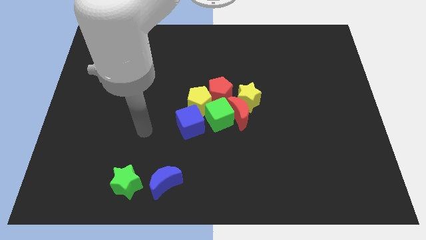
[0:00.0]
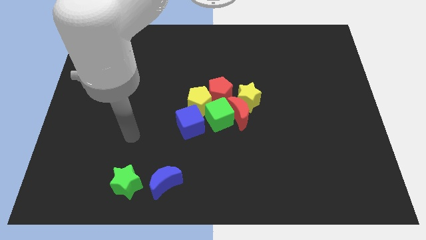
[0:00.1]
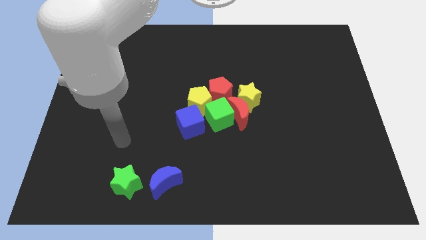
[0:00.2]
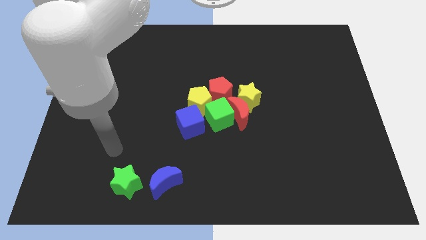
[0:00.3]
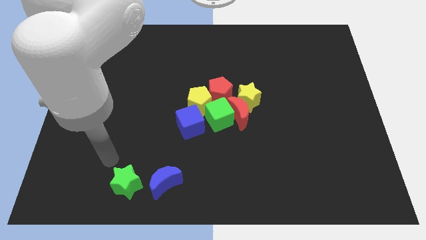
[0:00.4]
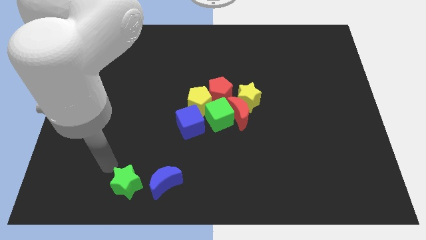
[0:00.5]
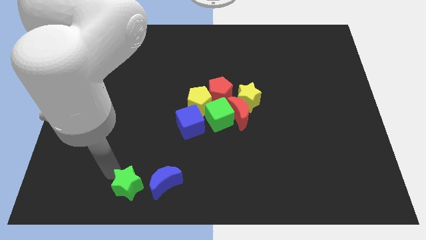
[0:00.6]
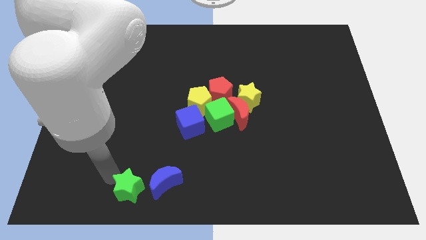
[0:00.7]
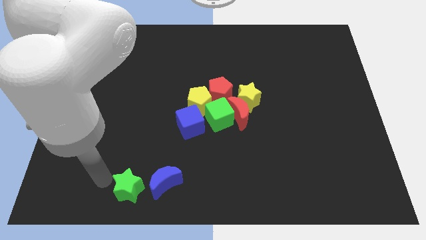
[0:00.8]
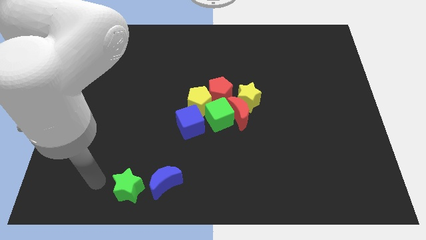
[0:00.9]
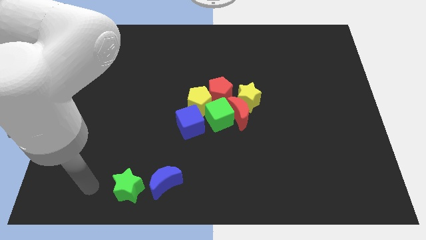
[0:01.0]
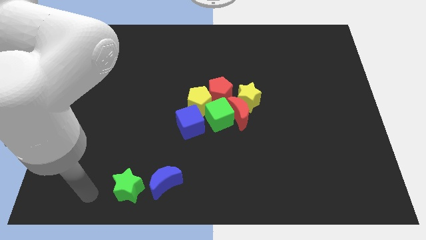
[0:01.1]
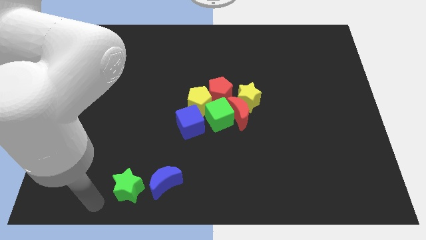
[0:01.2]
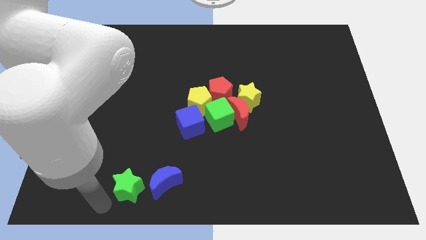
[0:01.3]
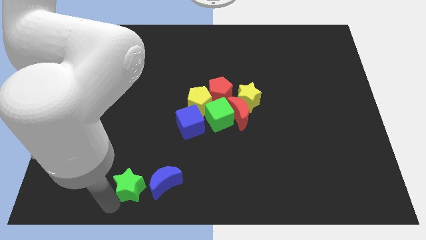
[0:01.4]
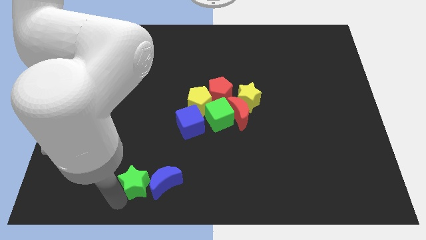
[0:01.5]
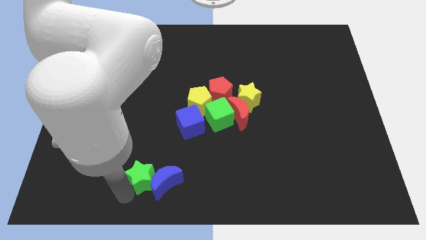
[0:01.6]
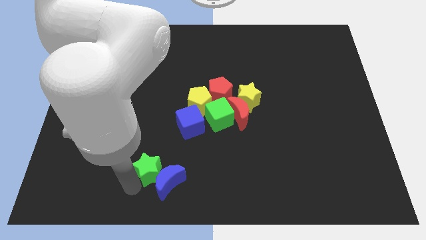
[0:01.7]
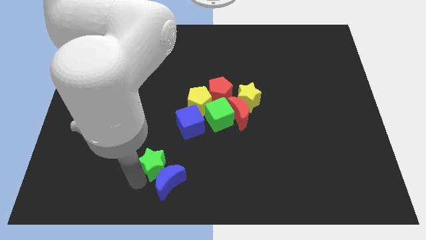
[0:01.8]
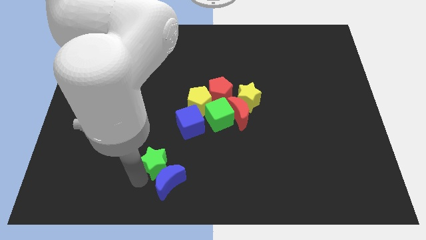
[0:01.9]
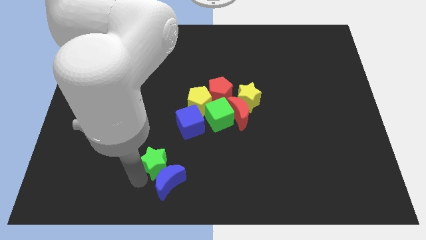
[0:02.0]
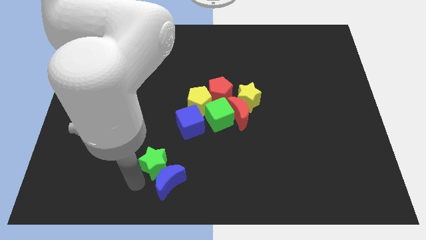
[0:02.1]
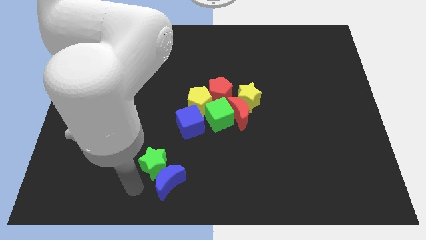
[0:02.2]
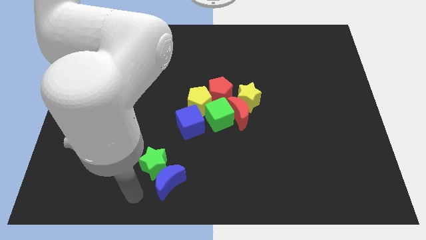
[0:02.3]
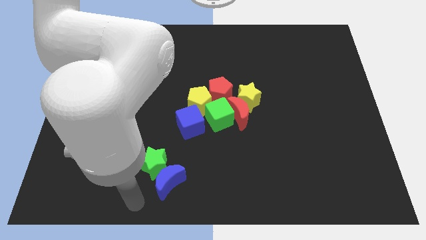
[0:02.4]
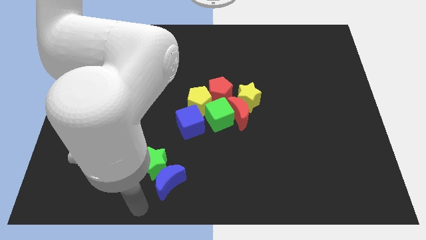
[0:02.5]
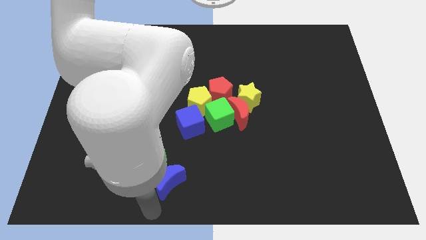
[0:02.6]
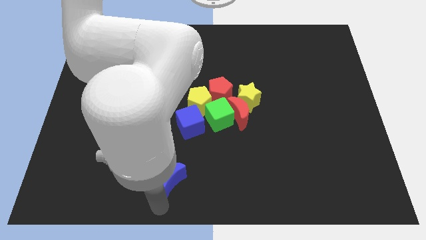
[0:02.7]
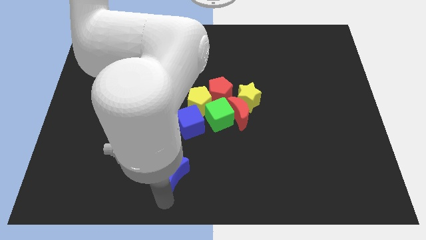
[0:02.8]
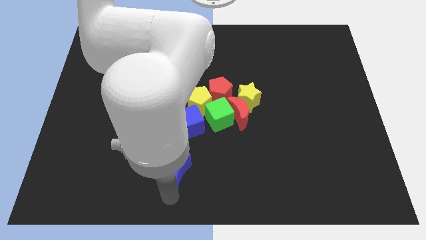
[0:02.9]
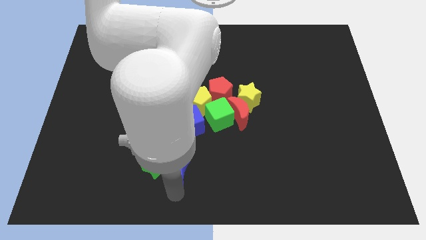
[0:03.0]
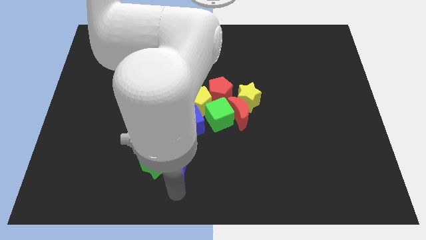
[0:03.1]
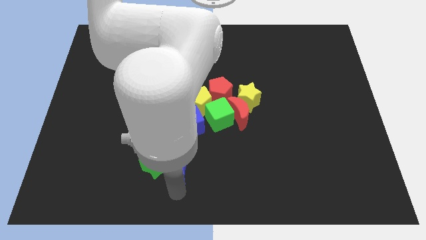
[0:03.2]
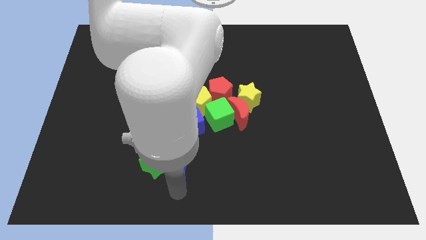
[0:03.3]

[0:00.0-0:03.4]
place the green star and blue moon slightly upwards

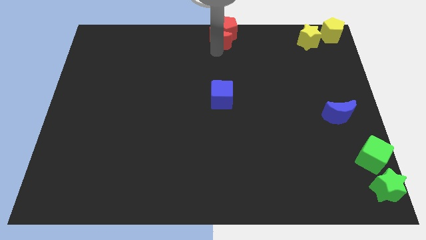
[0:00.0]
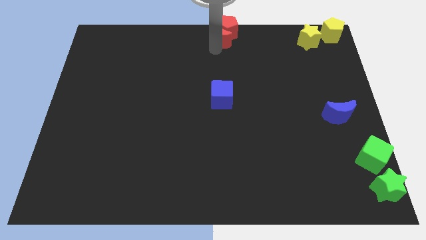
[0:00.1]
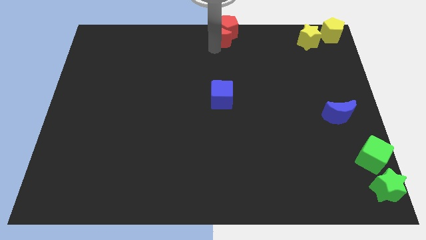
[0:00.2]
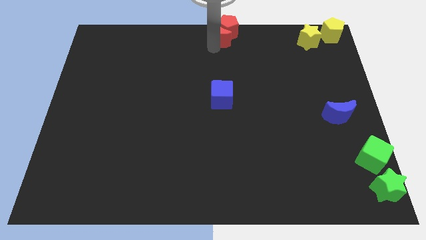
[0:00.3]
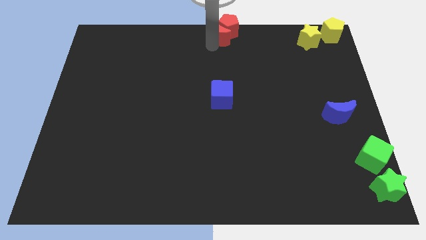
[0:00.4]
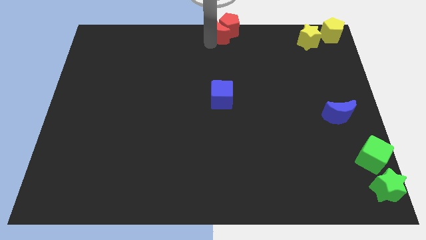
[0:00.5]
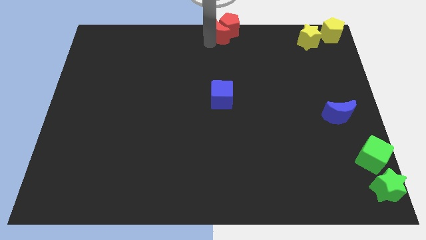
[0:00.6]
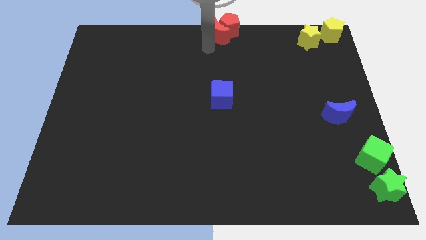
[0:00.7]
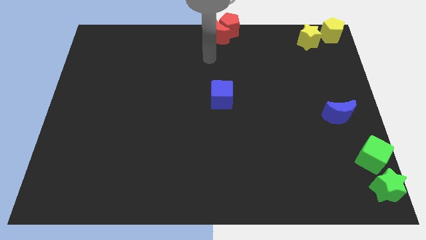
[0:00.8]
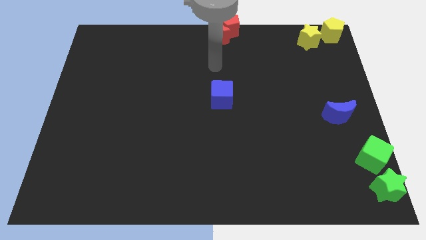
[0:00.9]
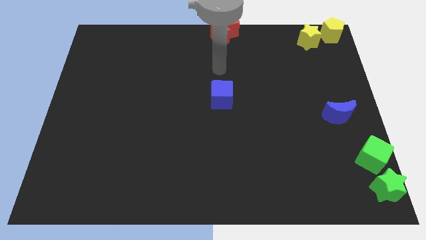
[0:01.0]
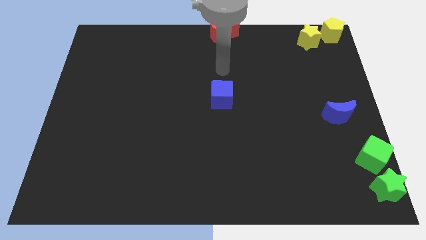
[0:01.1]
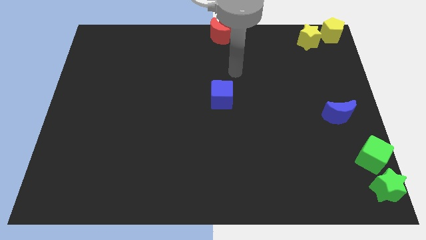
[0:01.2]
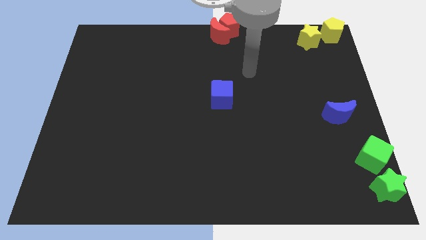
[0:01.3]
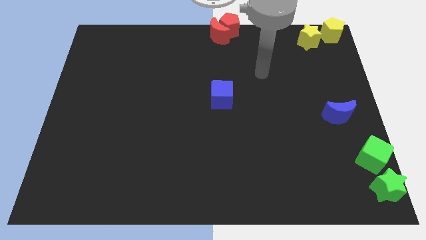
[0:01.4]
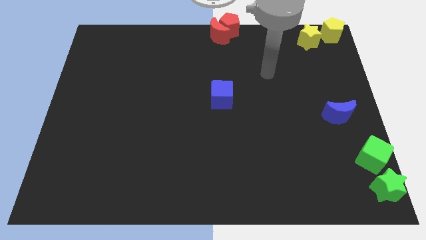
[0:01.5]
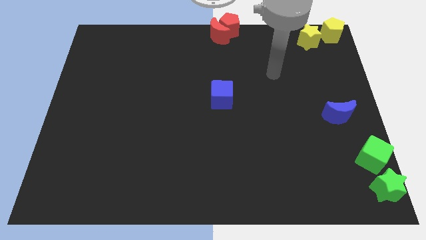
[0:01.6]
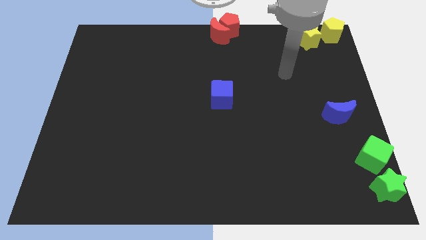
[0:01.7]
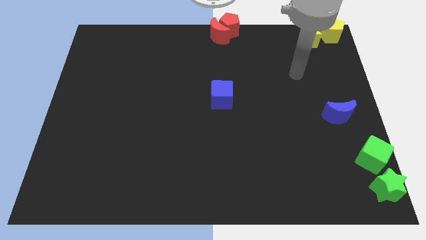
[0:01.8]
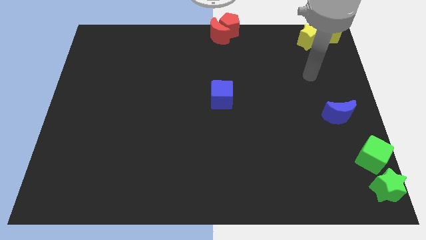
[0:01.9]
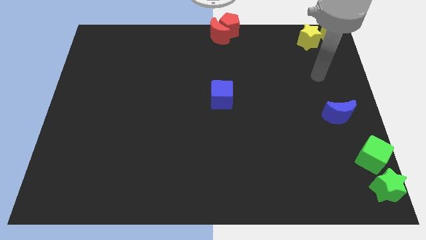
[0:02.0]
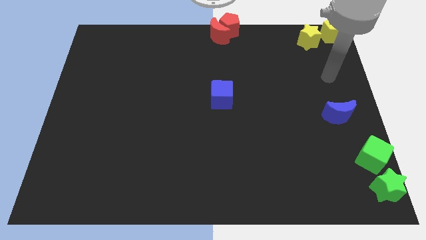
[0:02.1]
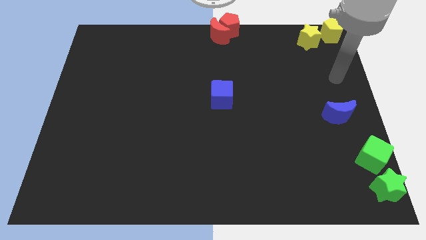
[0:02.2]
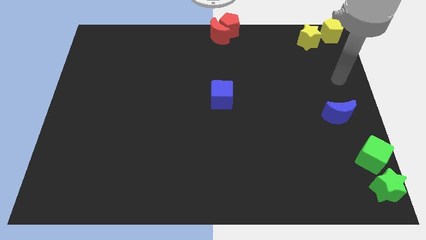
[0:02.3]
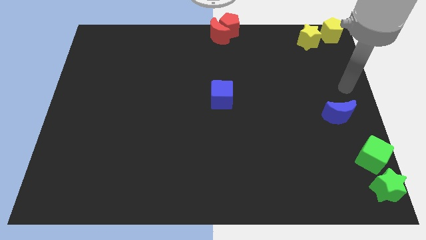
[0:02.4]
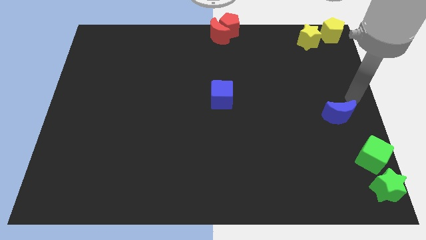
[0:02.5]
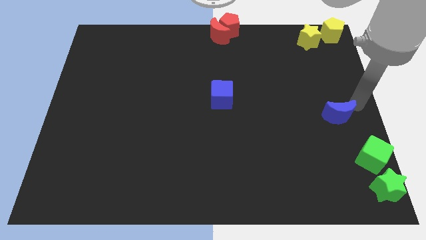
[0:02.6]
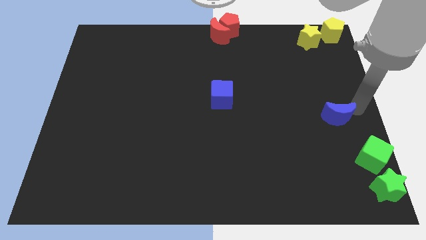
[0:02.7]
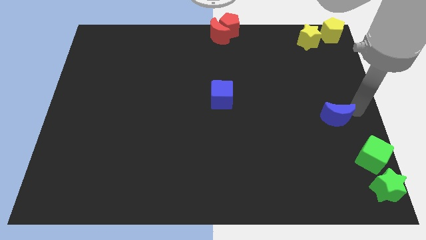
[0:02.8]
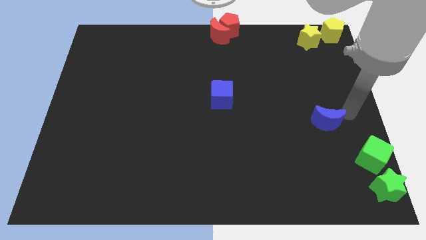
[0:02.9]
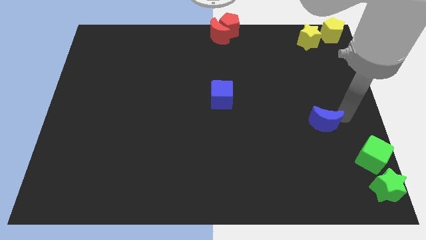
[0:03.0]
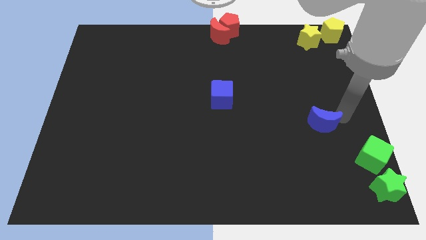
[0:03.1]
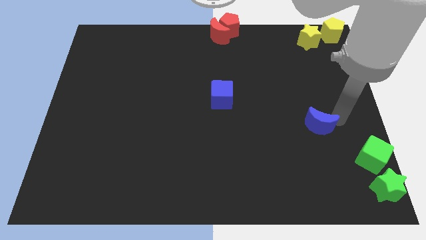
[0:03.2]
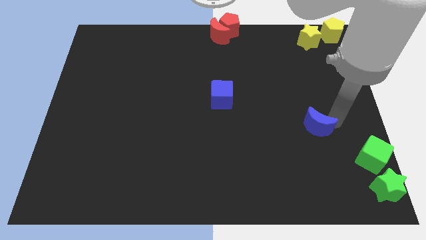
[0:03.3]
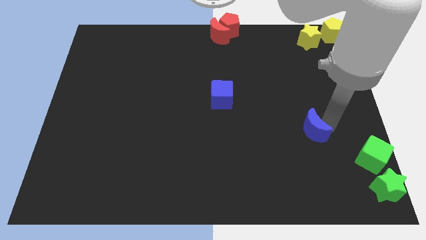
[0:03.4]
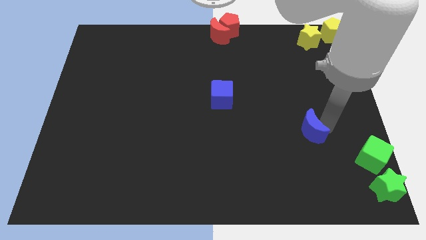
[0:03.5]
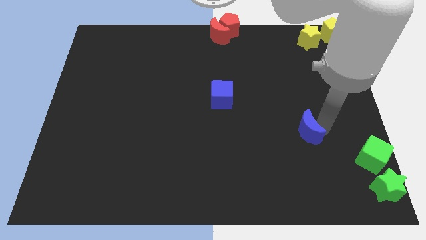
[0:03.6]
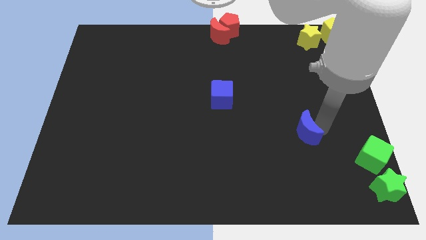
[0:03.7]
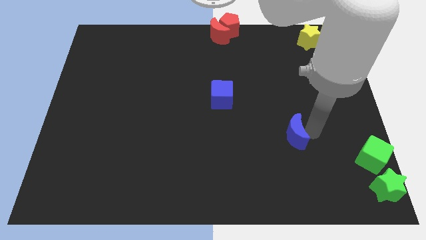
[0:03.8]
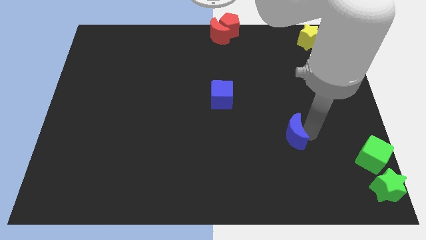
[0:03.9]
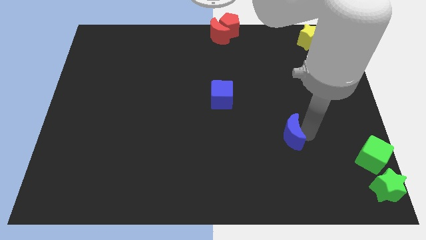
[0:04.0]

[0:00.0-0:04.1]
move the blue crescent slightly to the left side

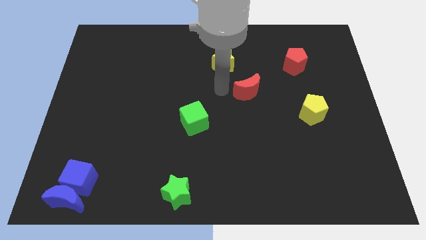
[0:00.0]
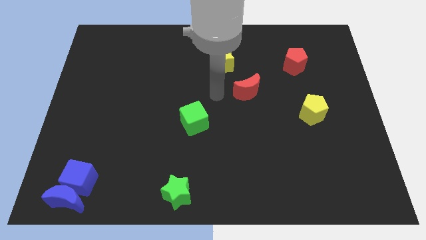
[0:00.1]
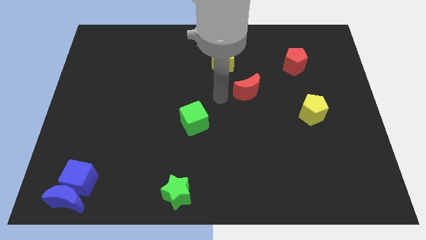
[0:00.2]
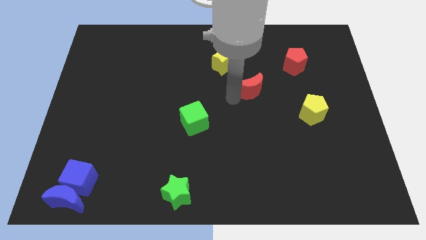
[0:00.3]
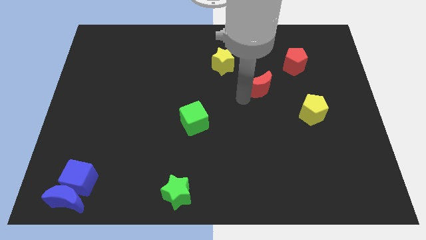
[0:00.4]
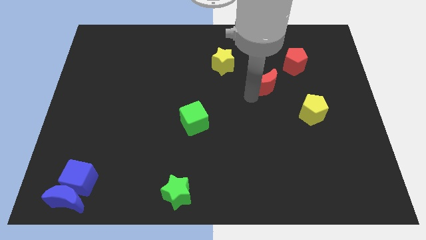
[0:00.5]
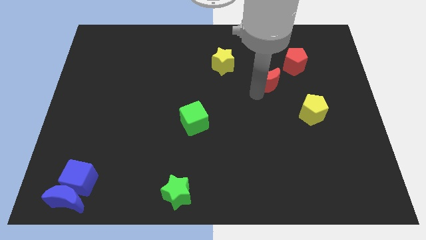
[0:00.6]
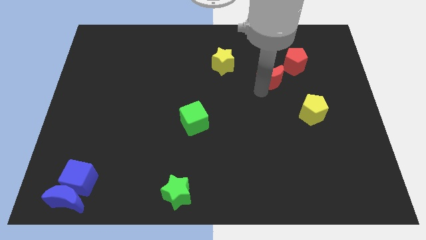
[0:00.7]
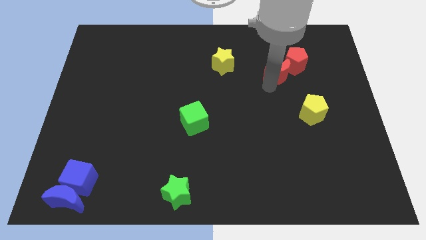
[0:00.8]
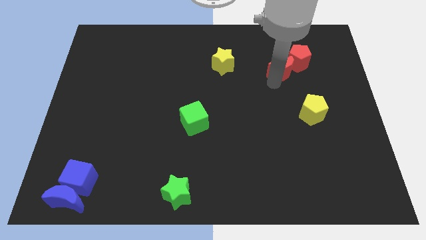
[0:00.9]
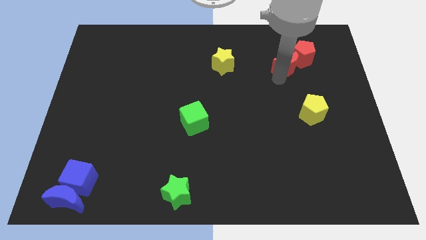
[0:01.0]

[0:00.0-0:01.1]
push the red crescent into the red pentagon

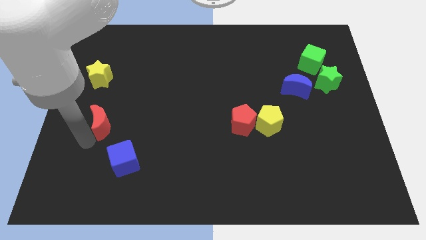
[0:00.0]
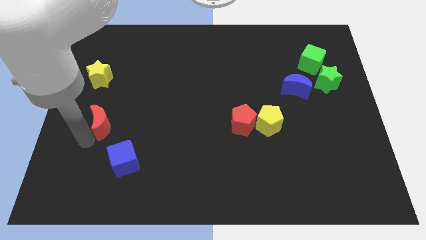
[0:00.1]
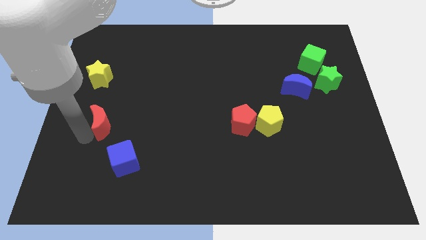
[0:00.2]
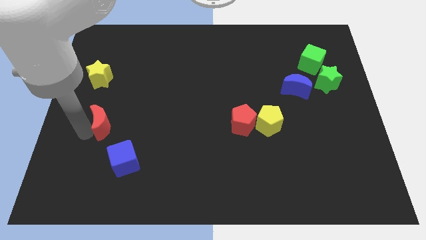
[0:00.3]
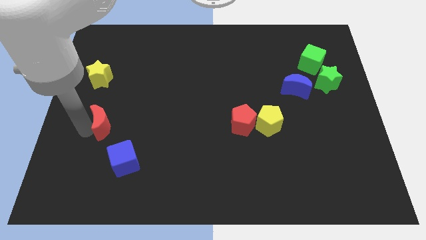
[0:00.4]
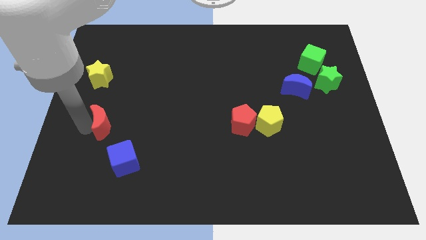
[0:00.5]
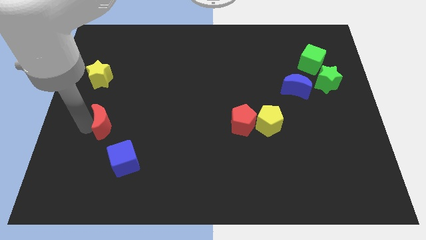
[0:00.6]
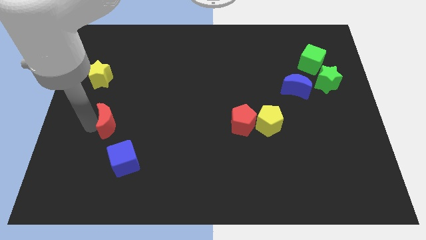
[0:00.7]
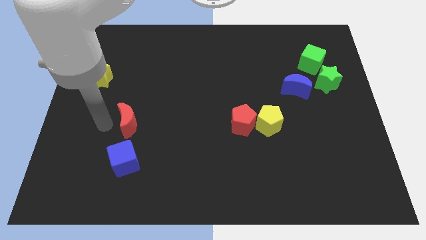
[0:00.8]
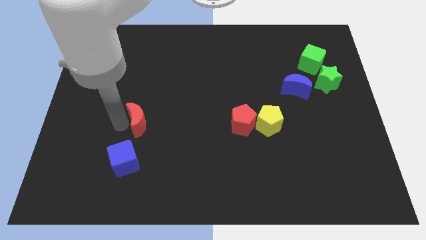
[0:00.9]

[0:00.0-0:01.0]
put red moon on the top of blue cube
